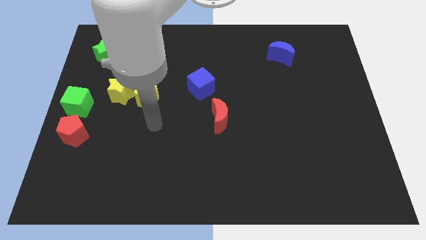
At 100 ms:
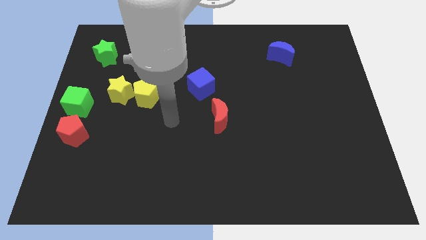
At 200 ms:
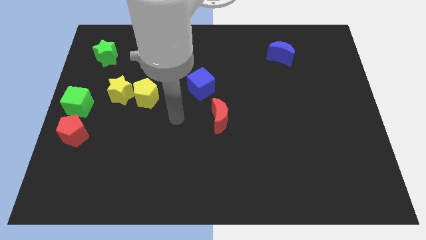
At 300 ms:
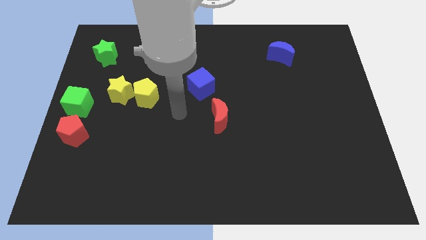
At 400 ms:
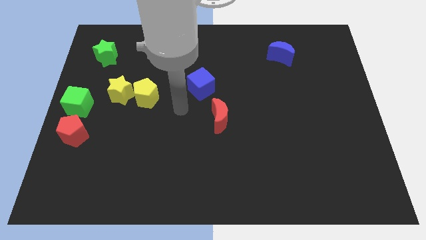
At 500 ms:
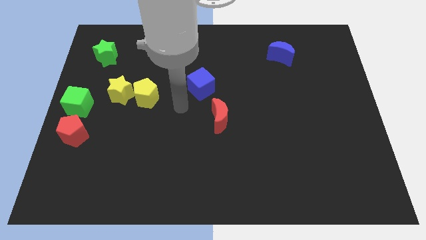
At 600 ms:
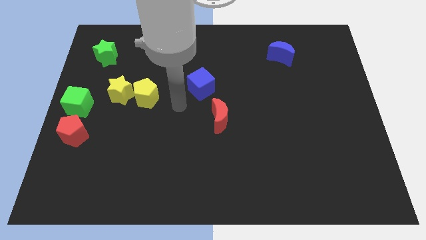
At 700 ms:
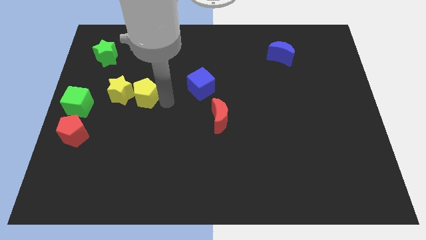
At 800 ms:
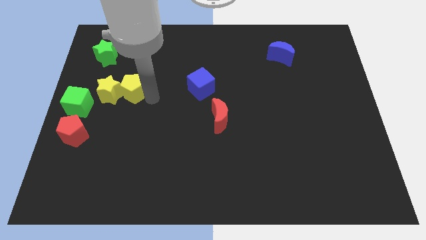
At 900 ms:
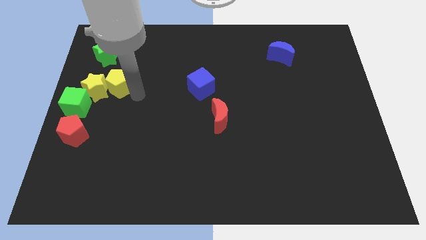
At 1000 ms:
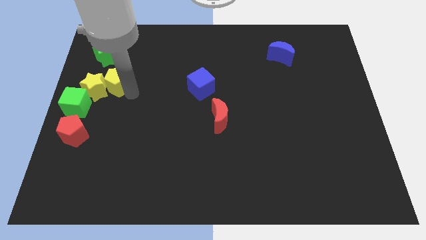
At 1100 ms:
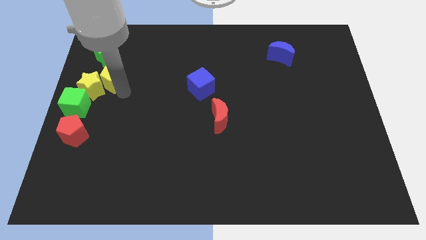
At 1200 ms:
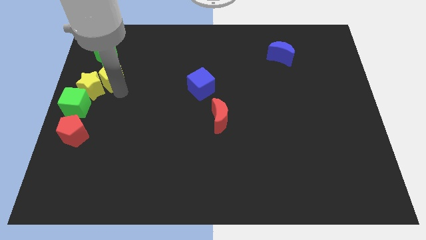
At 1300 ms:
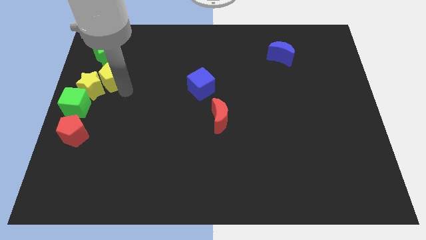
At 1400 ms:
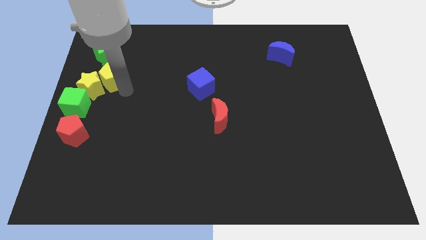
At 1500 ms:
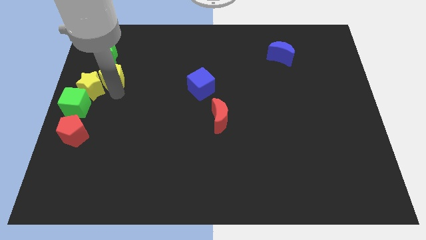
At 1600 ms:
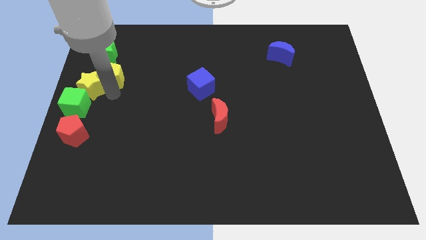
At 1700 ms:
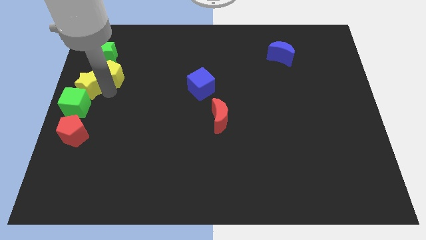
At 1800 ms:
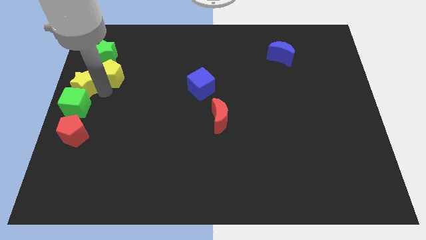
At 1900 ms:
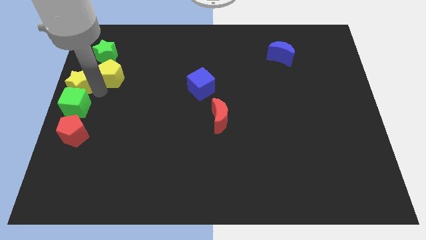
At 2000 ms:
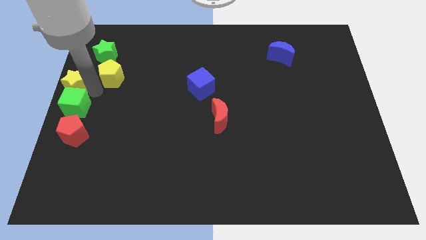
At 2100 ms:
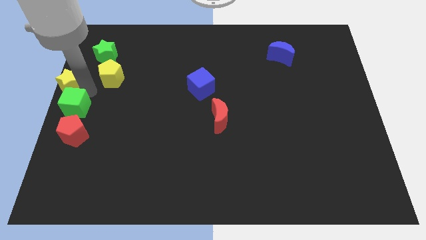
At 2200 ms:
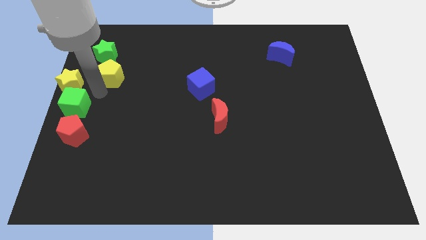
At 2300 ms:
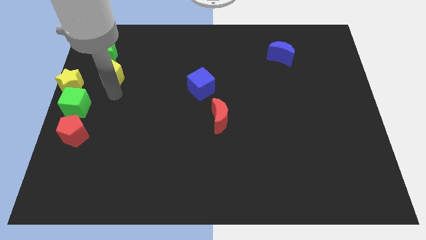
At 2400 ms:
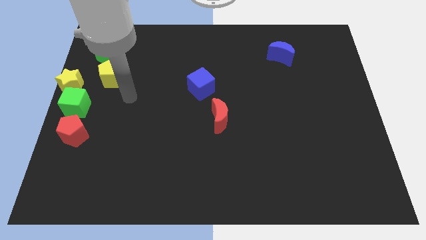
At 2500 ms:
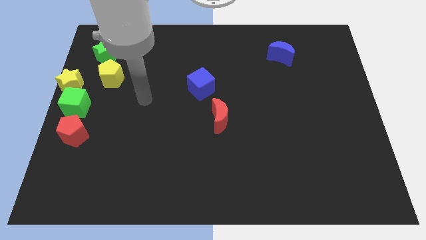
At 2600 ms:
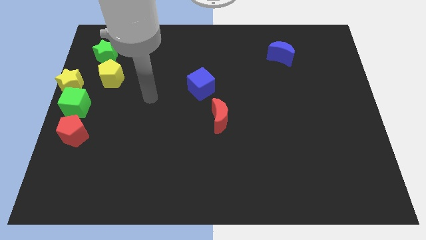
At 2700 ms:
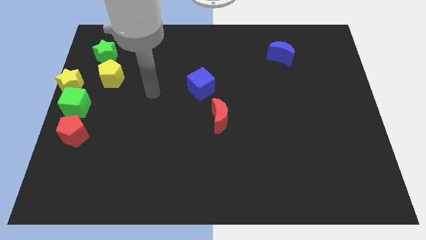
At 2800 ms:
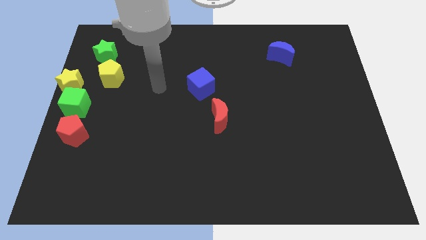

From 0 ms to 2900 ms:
push yellow star above green cube

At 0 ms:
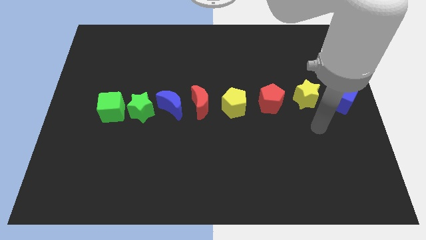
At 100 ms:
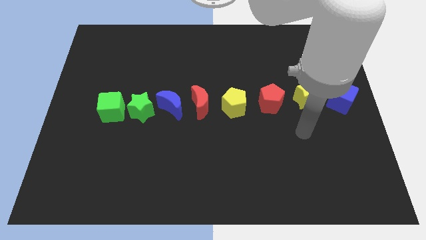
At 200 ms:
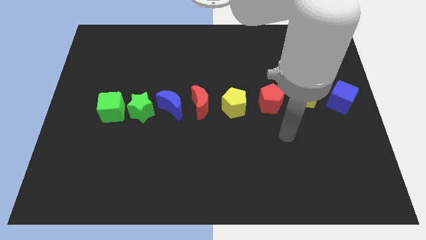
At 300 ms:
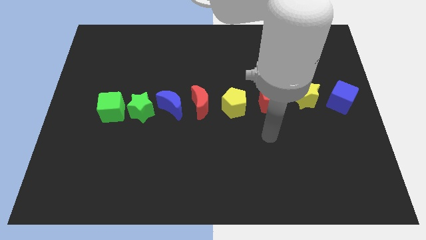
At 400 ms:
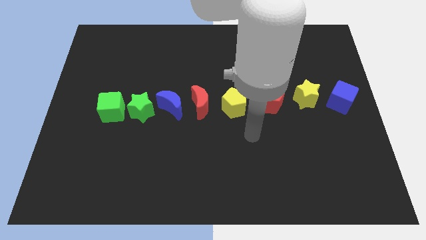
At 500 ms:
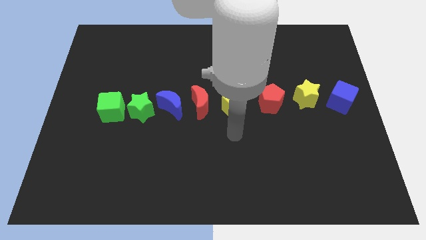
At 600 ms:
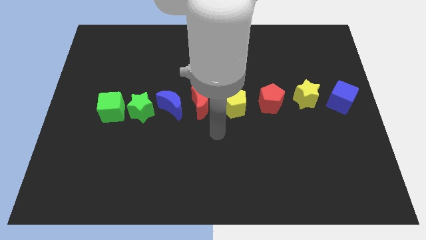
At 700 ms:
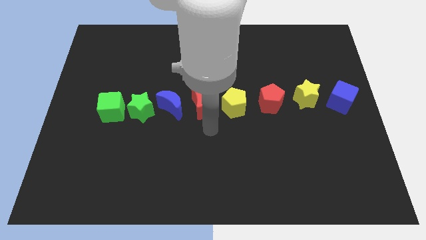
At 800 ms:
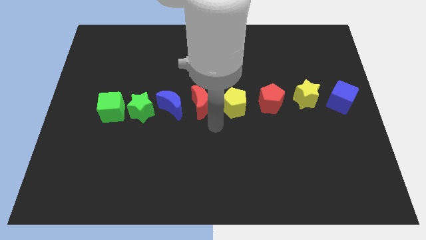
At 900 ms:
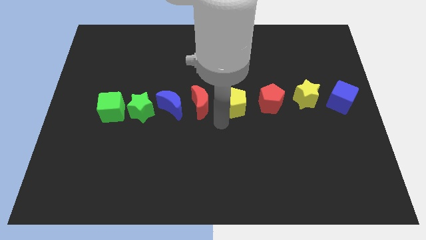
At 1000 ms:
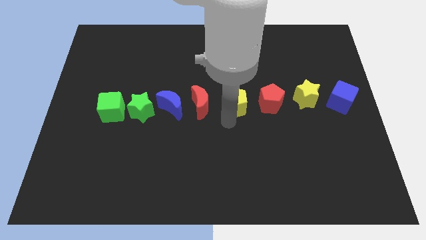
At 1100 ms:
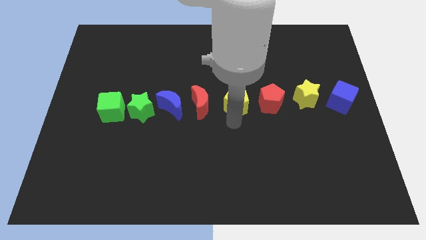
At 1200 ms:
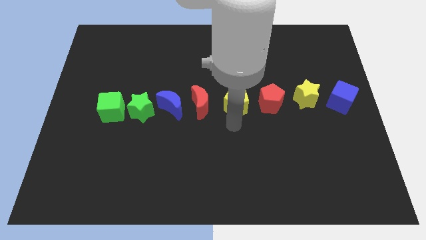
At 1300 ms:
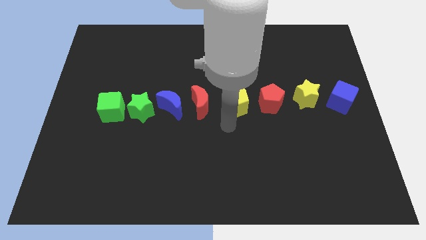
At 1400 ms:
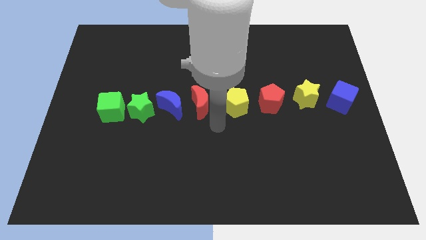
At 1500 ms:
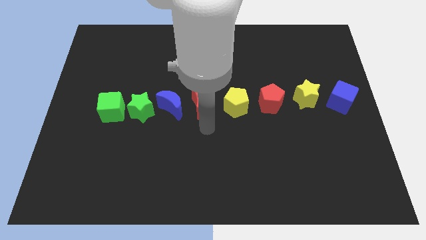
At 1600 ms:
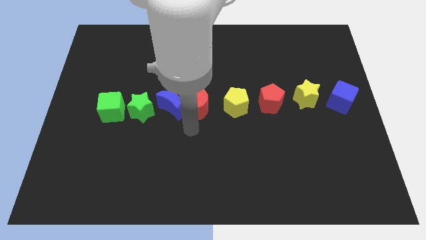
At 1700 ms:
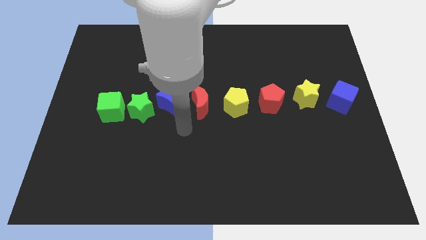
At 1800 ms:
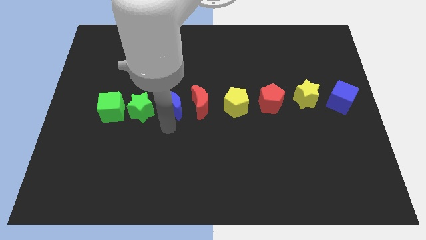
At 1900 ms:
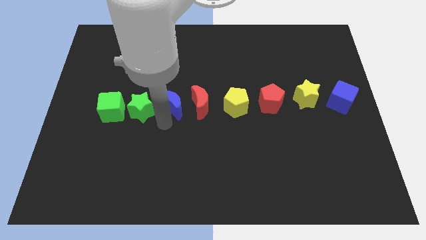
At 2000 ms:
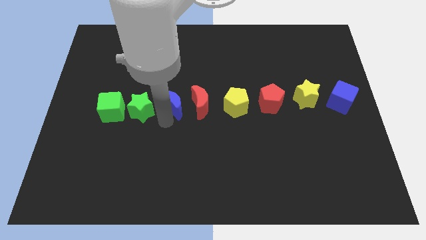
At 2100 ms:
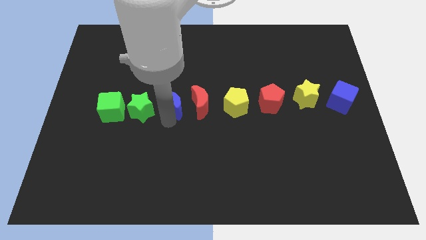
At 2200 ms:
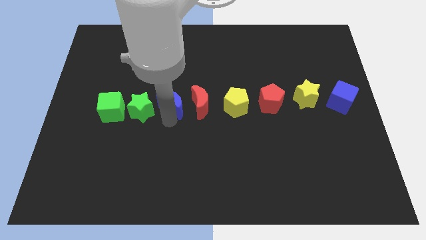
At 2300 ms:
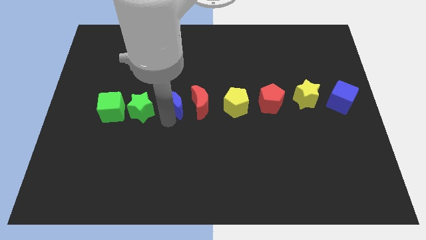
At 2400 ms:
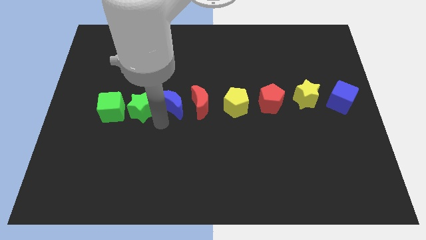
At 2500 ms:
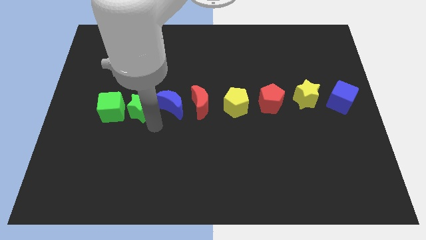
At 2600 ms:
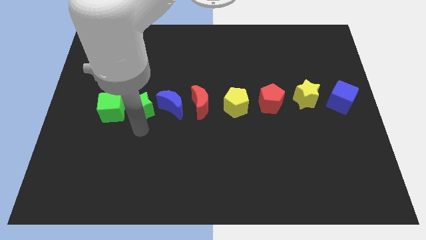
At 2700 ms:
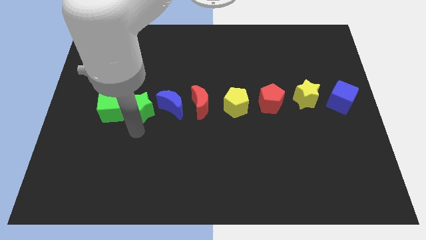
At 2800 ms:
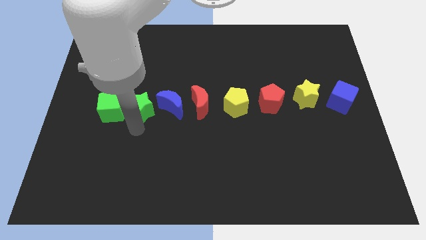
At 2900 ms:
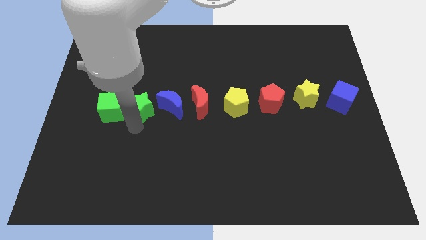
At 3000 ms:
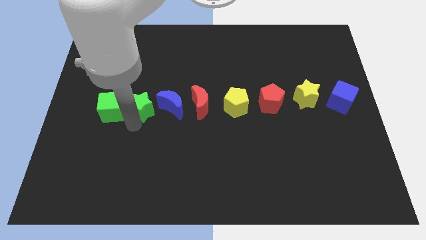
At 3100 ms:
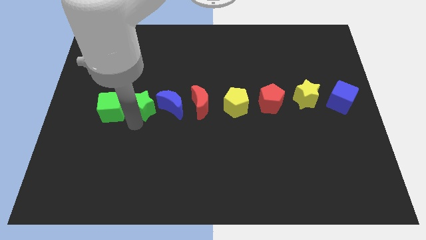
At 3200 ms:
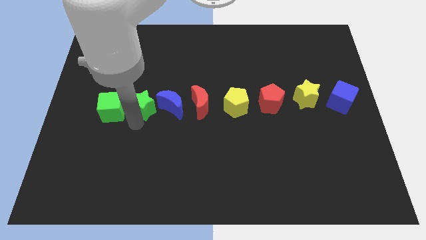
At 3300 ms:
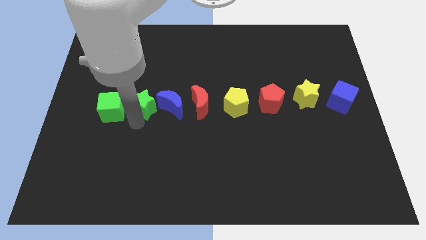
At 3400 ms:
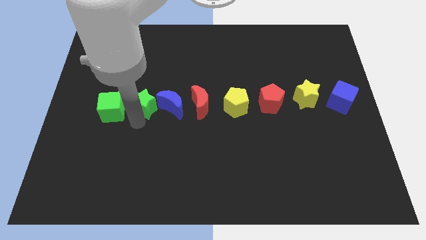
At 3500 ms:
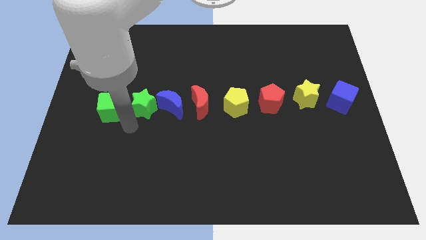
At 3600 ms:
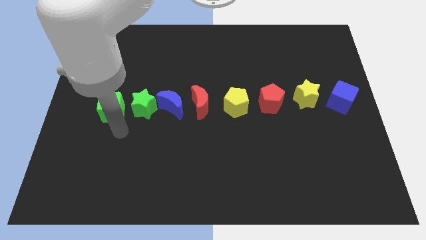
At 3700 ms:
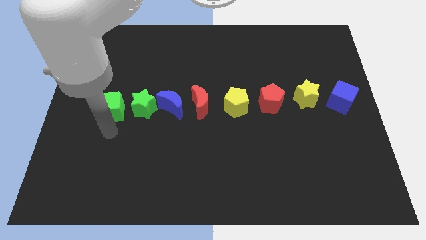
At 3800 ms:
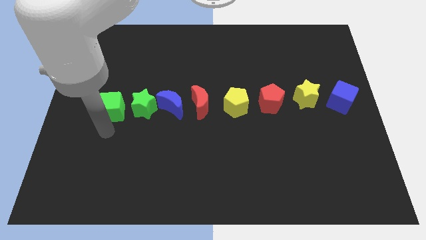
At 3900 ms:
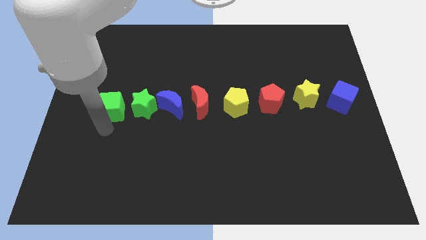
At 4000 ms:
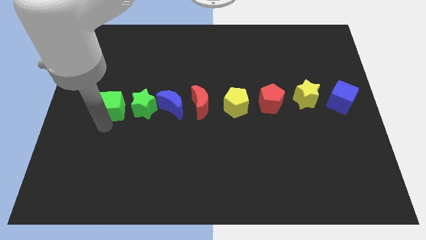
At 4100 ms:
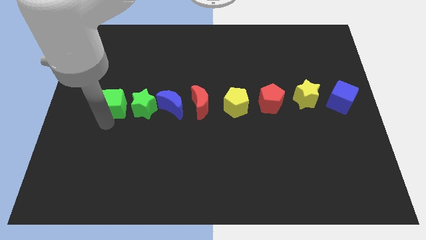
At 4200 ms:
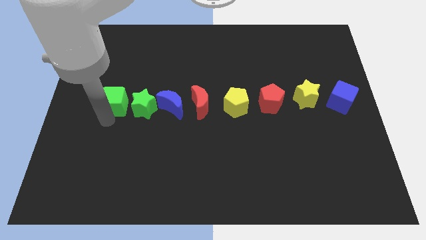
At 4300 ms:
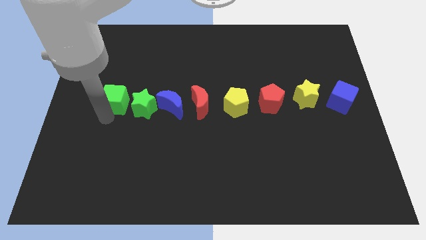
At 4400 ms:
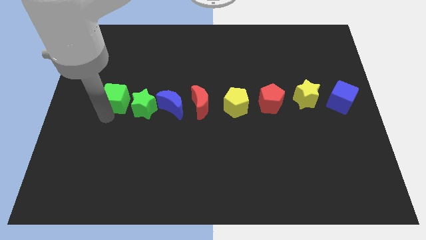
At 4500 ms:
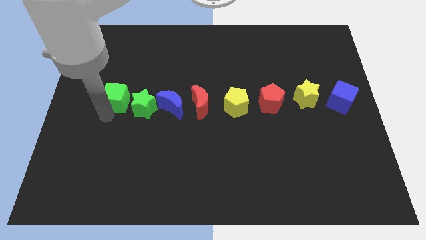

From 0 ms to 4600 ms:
slightly move the blue crescent green star and green cube upwards

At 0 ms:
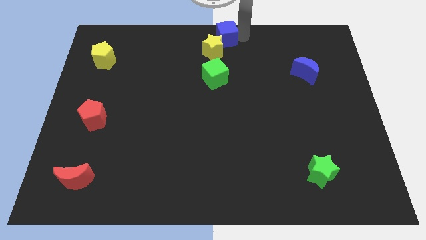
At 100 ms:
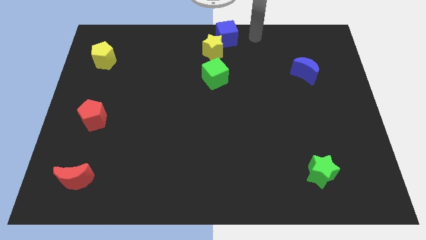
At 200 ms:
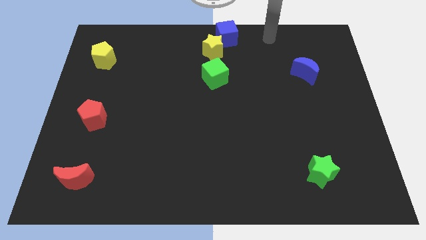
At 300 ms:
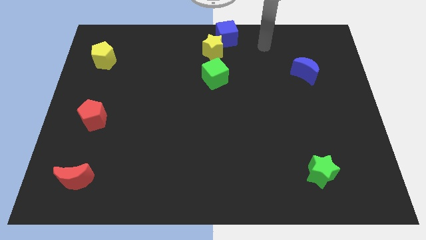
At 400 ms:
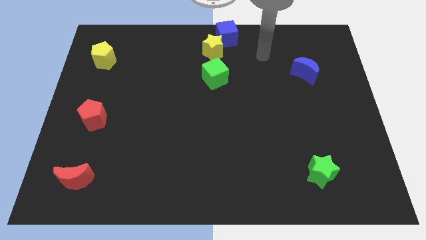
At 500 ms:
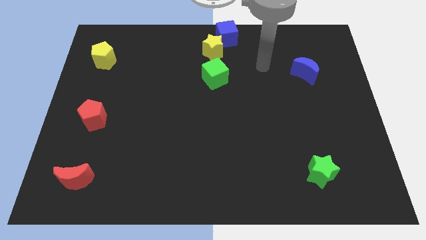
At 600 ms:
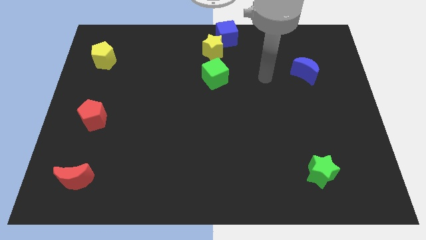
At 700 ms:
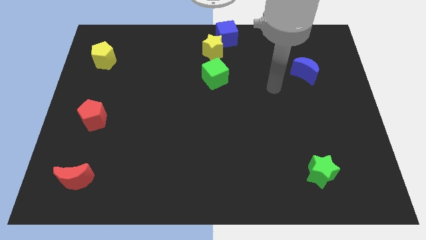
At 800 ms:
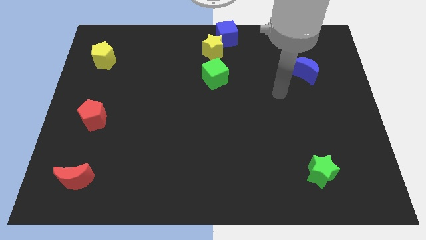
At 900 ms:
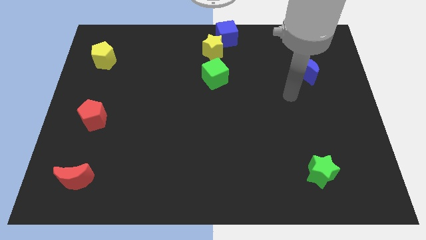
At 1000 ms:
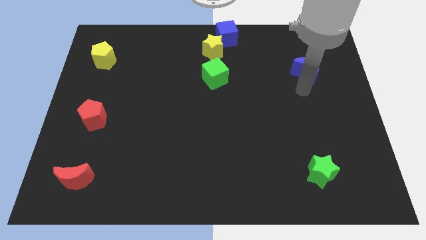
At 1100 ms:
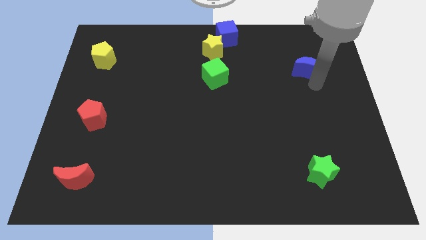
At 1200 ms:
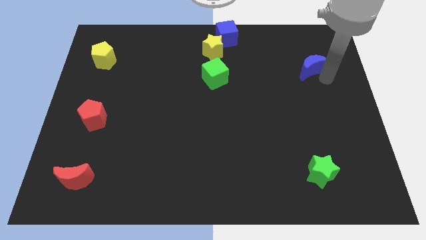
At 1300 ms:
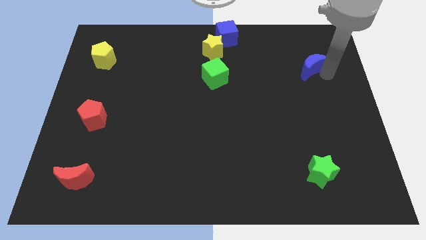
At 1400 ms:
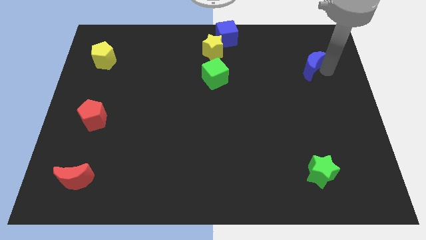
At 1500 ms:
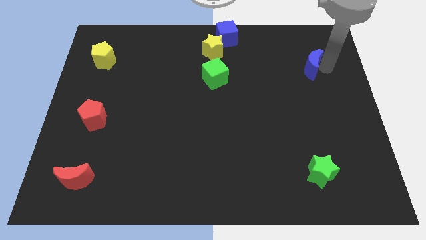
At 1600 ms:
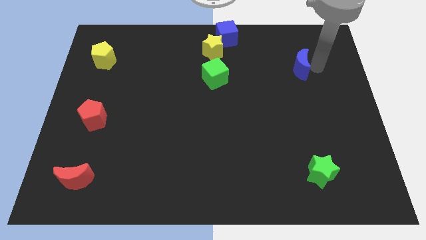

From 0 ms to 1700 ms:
move your arm towards the right side of the blue crescent
